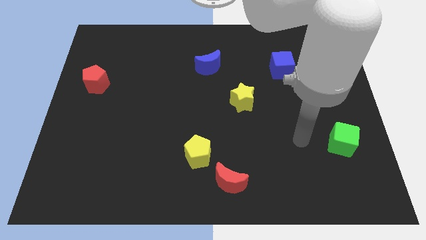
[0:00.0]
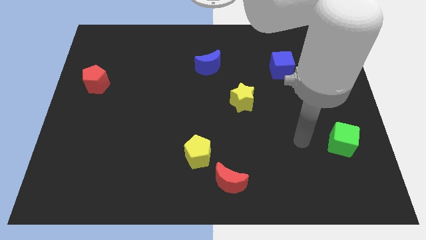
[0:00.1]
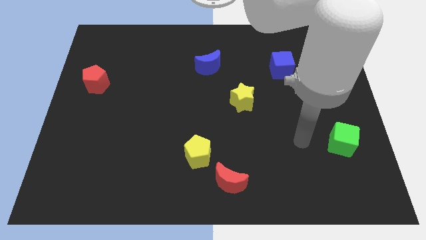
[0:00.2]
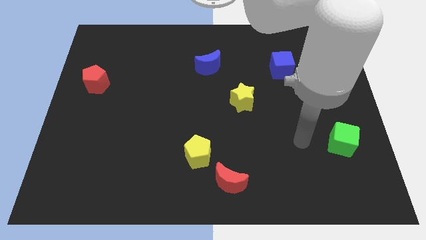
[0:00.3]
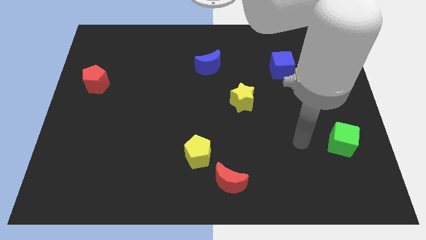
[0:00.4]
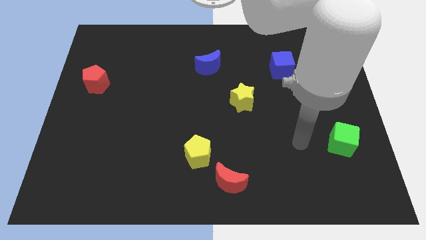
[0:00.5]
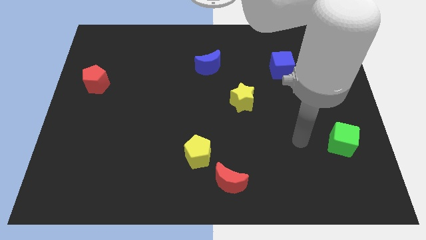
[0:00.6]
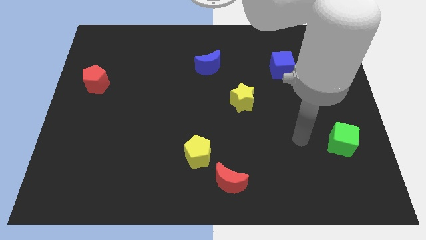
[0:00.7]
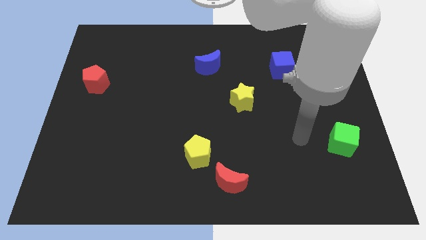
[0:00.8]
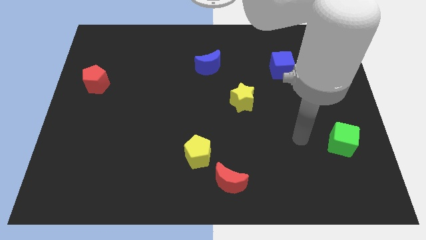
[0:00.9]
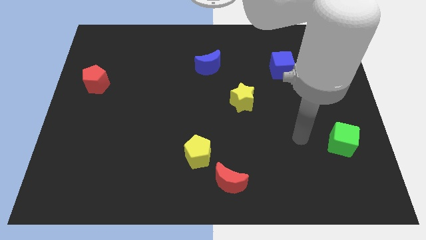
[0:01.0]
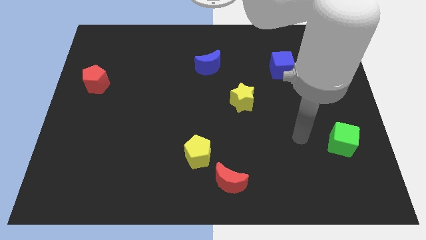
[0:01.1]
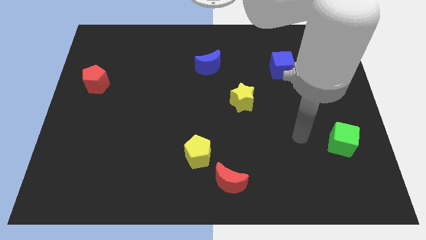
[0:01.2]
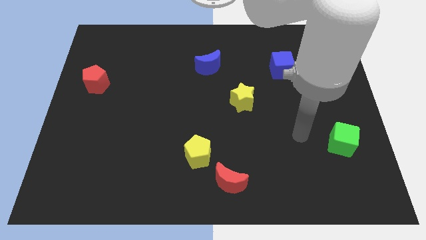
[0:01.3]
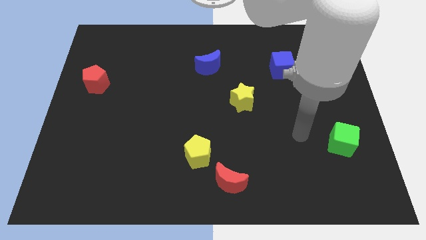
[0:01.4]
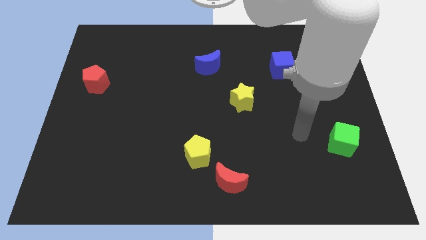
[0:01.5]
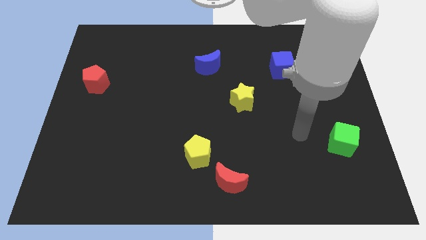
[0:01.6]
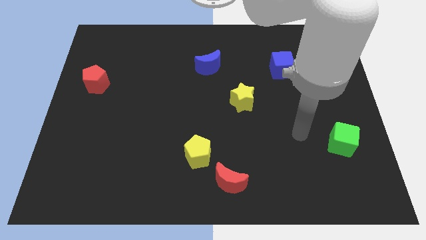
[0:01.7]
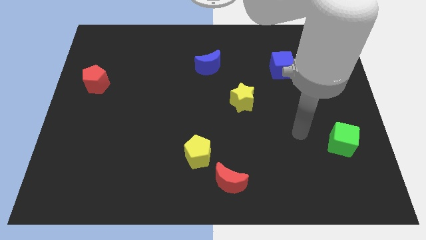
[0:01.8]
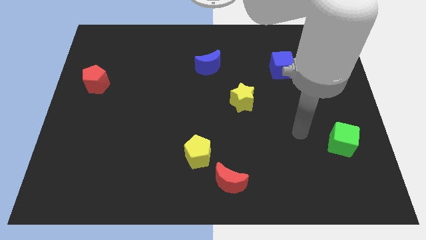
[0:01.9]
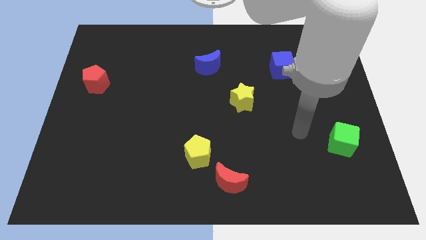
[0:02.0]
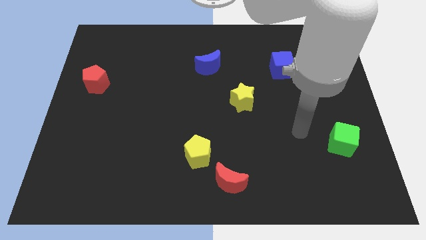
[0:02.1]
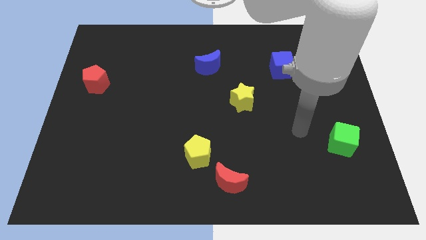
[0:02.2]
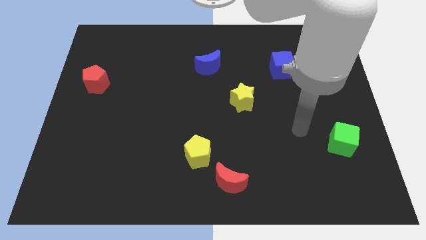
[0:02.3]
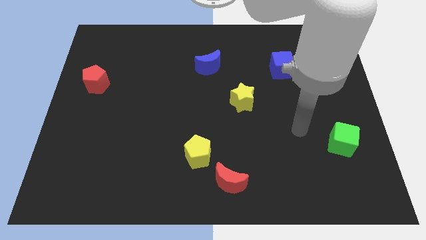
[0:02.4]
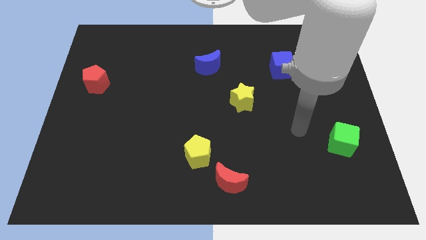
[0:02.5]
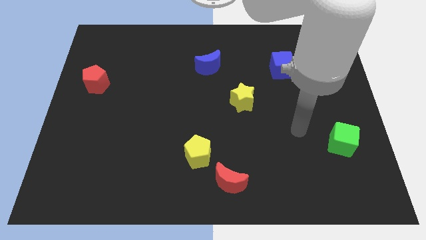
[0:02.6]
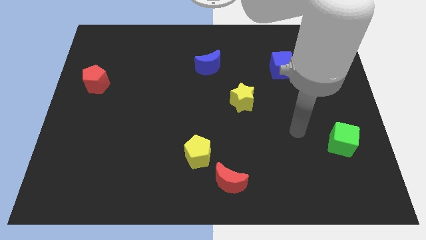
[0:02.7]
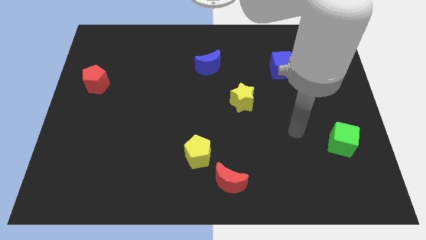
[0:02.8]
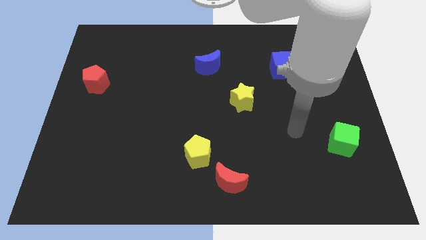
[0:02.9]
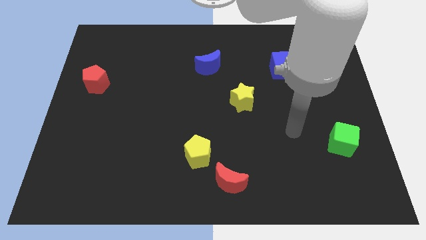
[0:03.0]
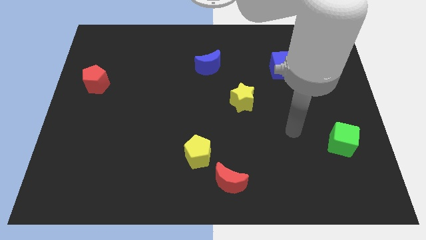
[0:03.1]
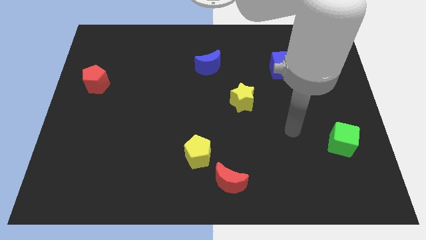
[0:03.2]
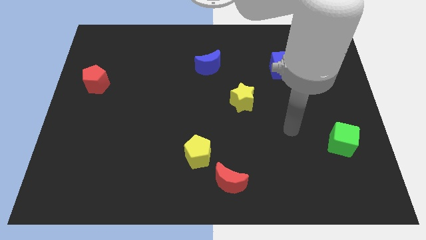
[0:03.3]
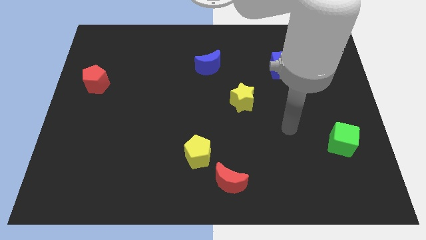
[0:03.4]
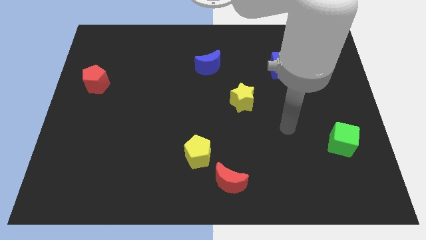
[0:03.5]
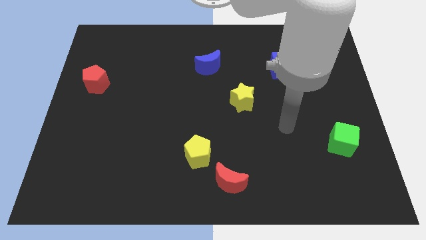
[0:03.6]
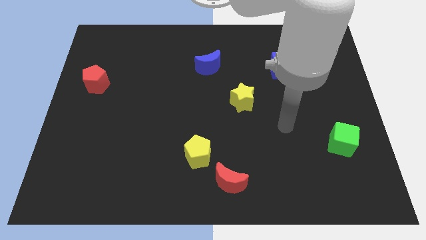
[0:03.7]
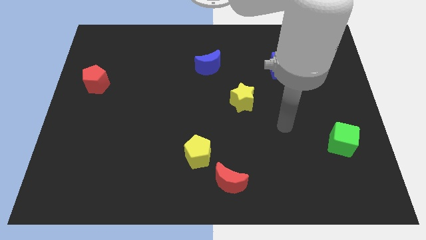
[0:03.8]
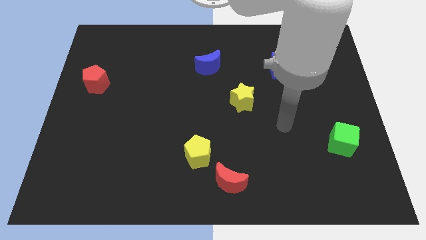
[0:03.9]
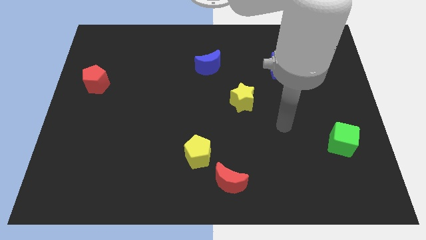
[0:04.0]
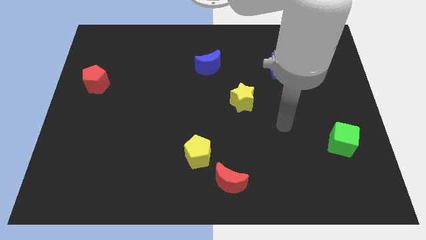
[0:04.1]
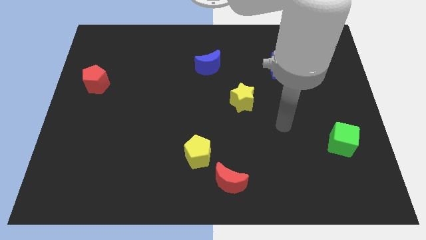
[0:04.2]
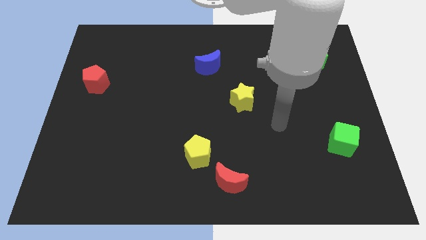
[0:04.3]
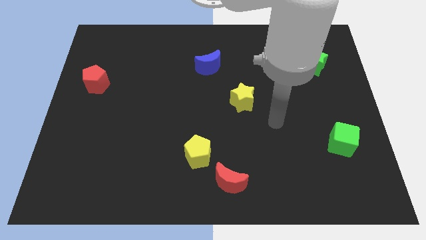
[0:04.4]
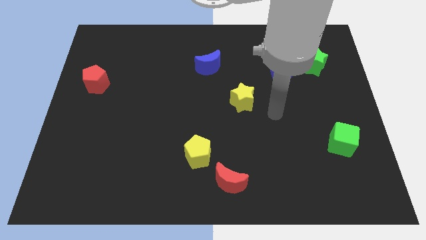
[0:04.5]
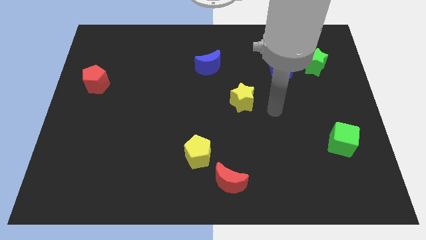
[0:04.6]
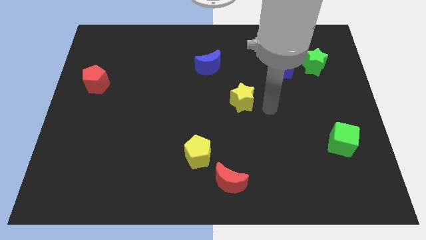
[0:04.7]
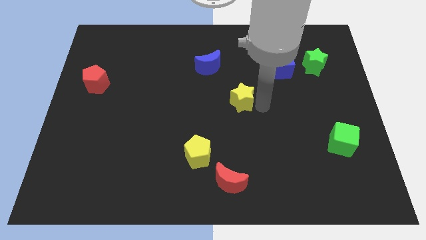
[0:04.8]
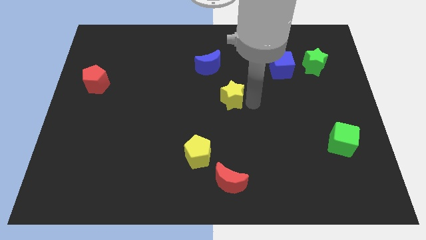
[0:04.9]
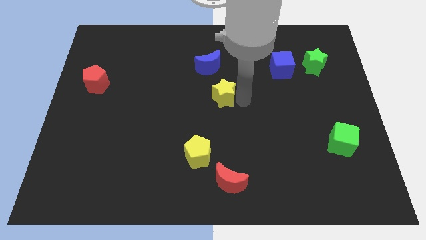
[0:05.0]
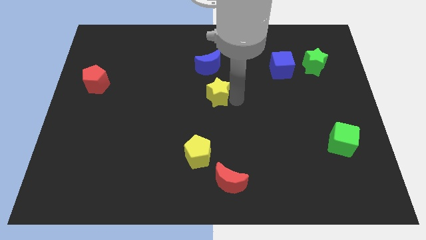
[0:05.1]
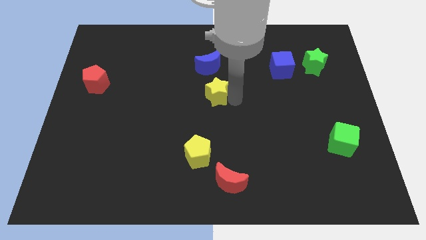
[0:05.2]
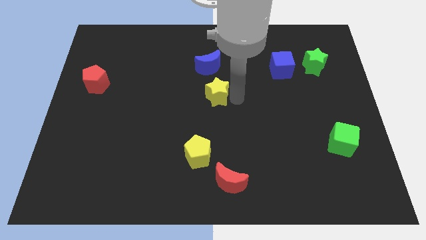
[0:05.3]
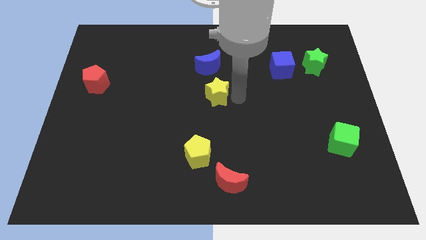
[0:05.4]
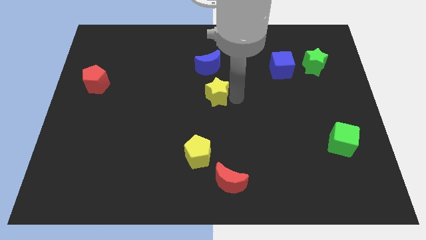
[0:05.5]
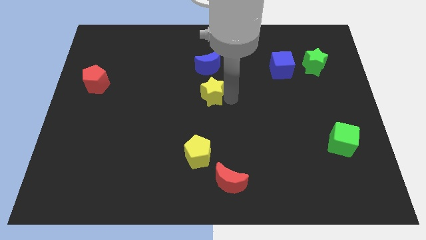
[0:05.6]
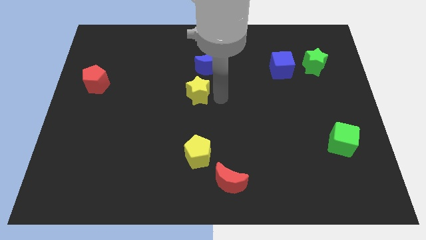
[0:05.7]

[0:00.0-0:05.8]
move the yellow star below the blue crescent

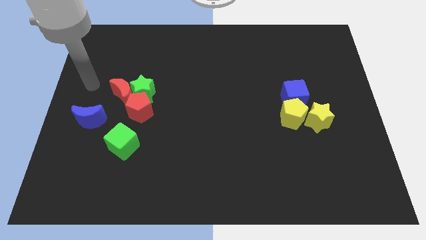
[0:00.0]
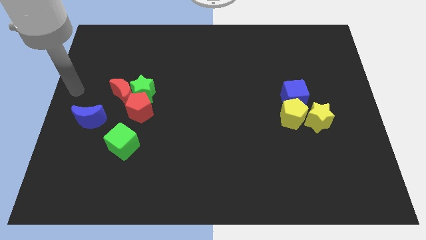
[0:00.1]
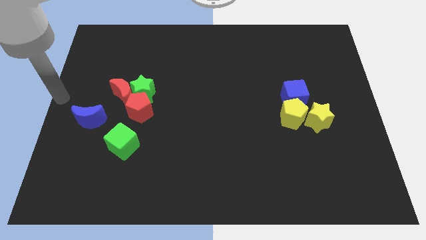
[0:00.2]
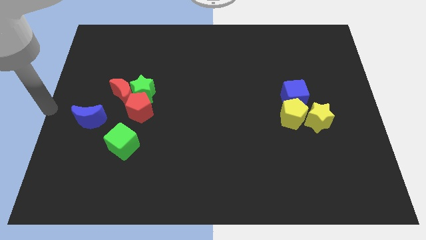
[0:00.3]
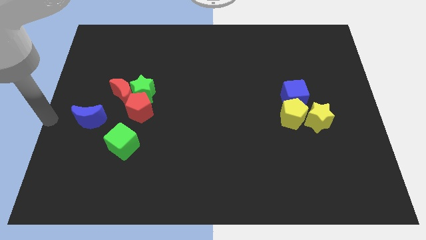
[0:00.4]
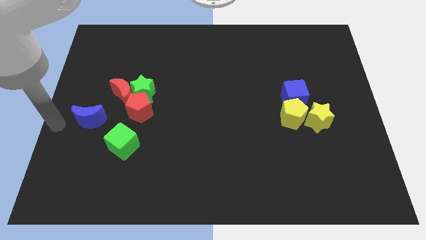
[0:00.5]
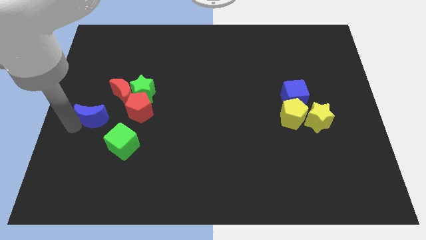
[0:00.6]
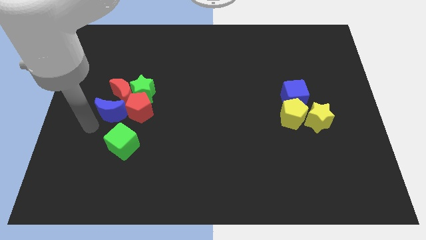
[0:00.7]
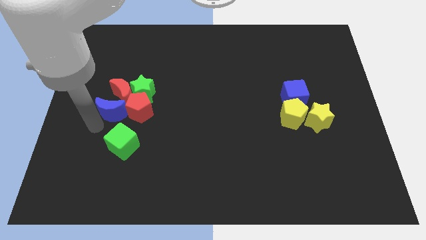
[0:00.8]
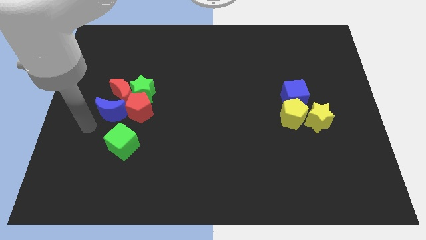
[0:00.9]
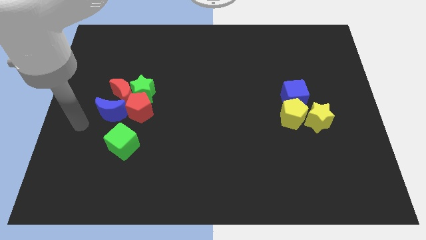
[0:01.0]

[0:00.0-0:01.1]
move the blue moon into the red moon and pentagon

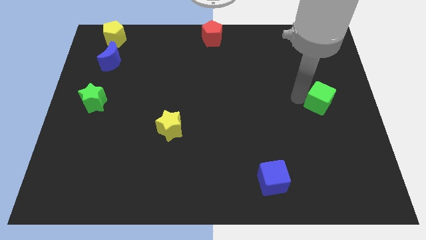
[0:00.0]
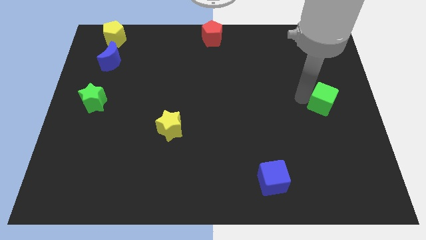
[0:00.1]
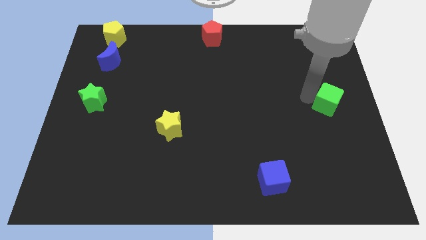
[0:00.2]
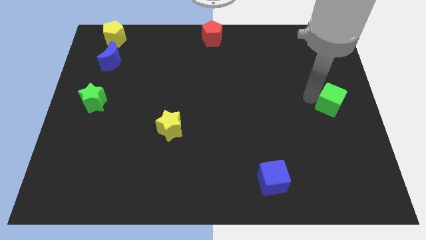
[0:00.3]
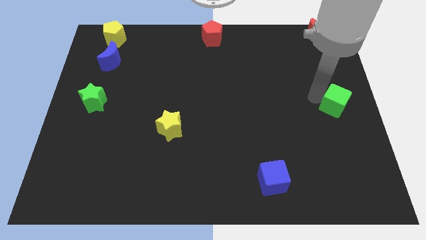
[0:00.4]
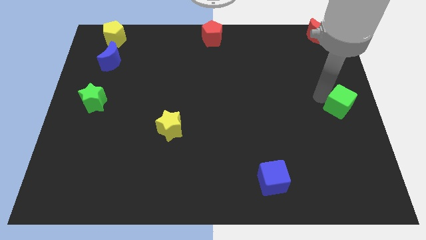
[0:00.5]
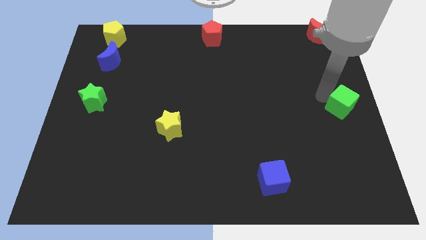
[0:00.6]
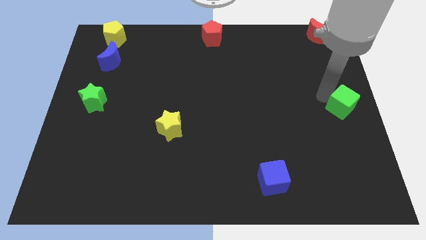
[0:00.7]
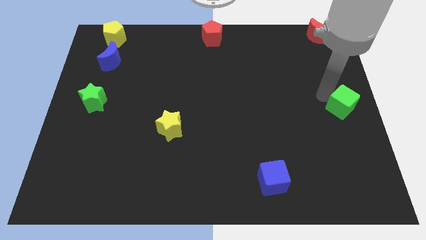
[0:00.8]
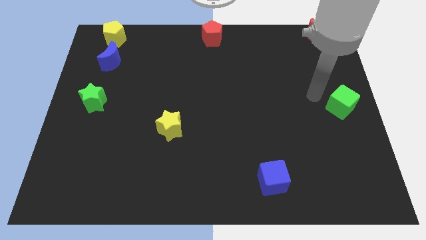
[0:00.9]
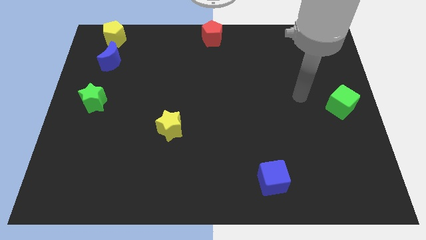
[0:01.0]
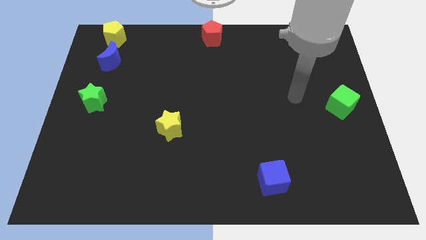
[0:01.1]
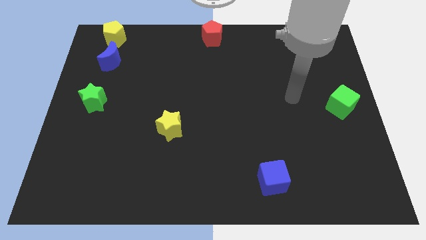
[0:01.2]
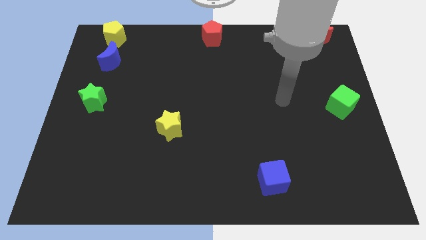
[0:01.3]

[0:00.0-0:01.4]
place the green cube towards the center right side of the board

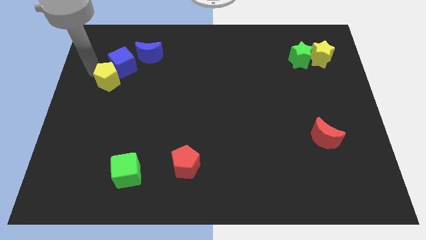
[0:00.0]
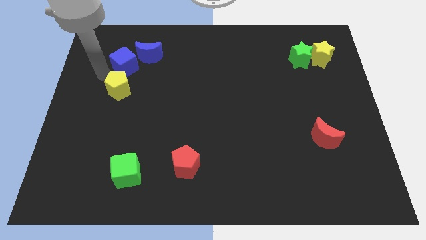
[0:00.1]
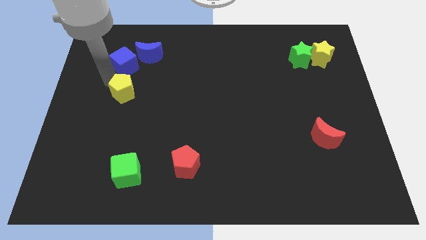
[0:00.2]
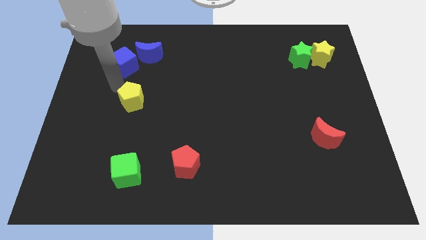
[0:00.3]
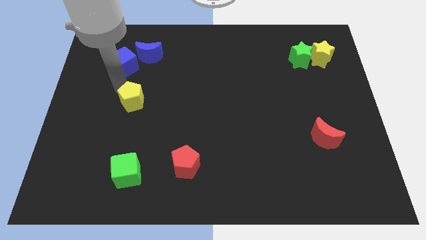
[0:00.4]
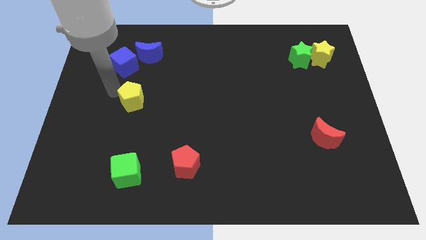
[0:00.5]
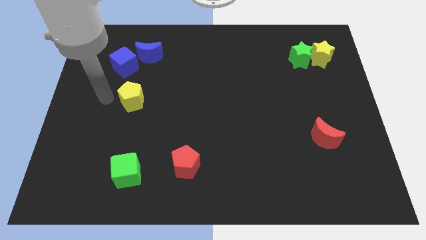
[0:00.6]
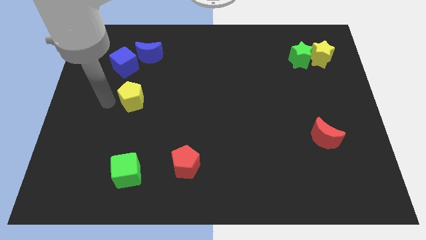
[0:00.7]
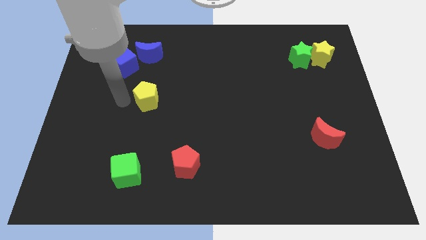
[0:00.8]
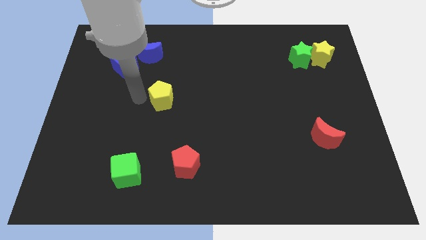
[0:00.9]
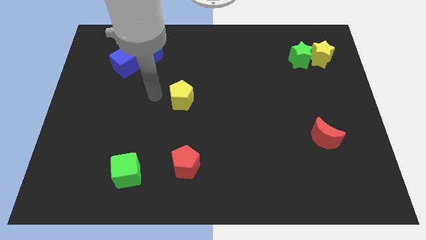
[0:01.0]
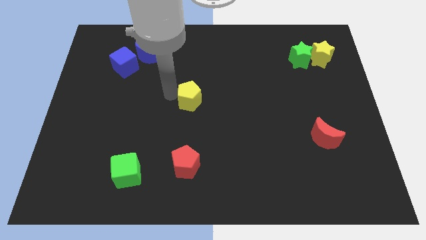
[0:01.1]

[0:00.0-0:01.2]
move yellow pentagon at right
